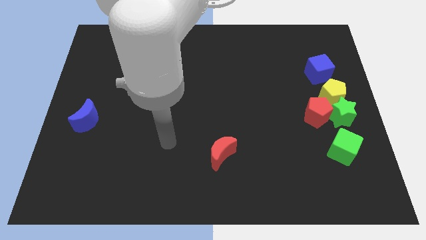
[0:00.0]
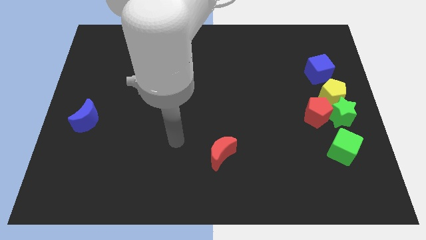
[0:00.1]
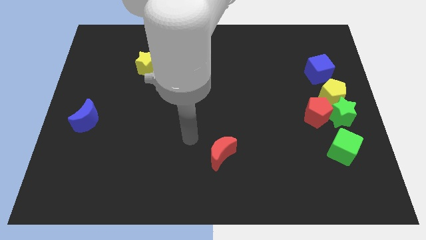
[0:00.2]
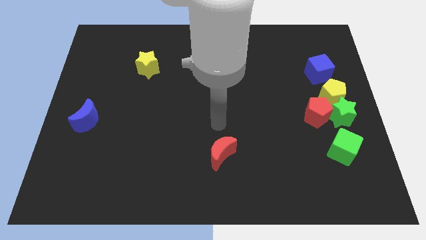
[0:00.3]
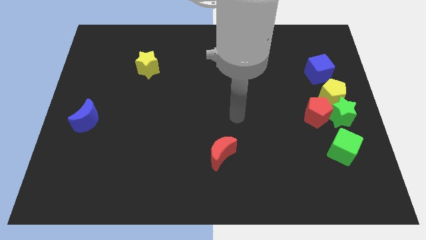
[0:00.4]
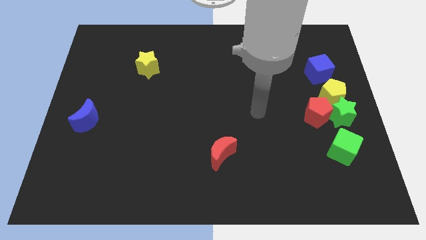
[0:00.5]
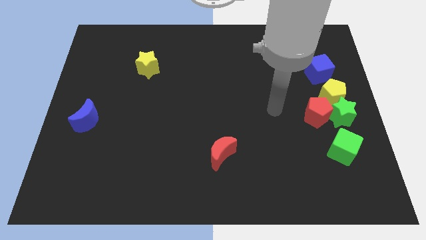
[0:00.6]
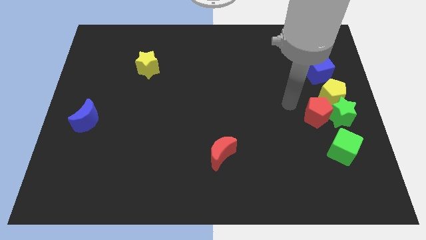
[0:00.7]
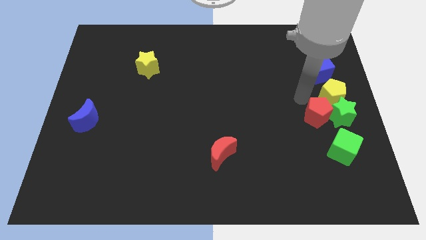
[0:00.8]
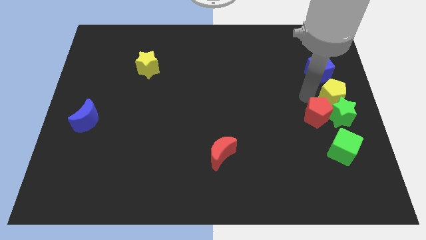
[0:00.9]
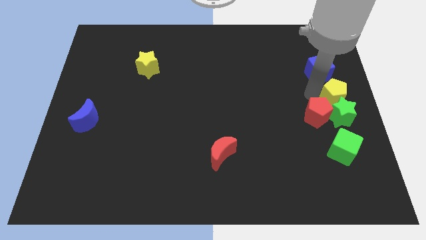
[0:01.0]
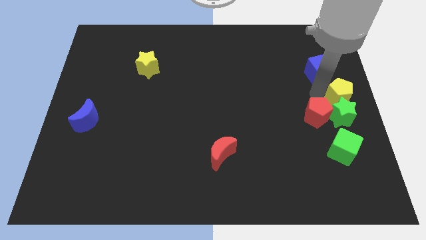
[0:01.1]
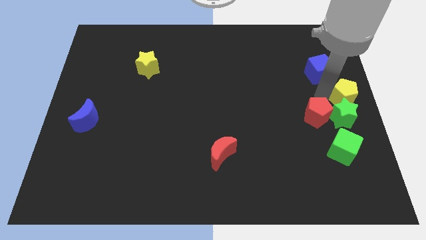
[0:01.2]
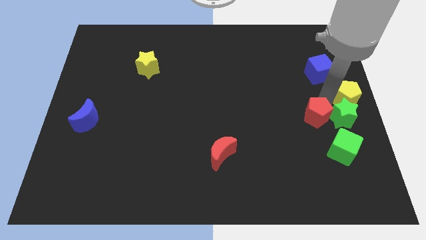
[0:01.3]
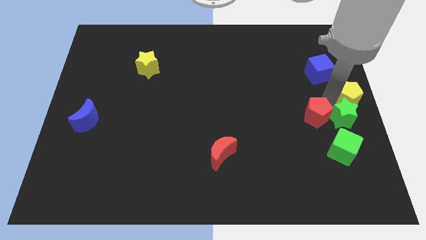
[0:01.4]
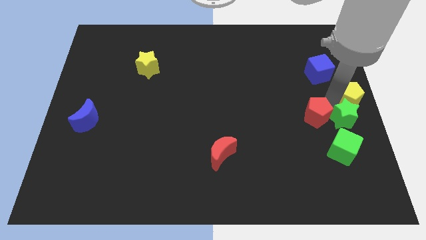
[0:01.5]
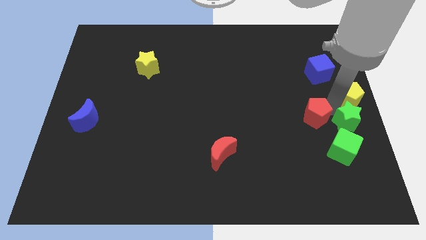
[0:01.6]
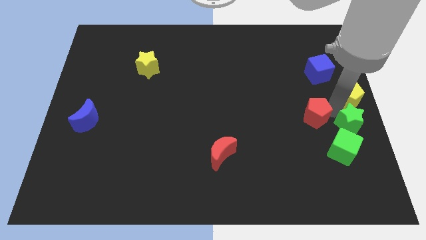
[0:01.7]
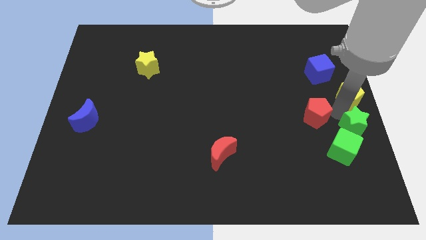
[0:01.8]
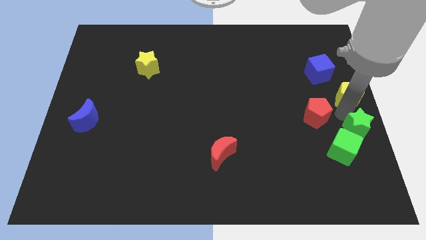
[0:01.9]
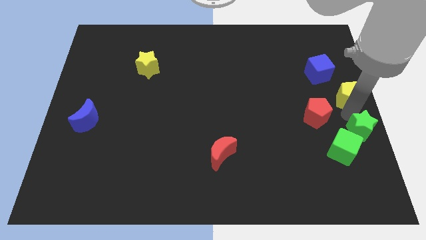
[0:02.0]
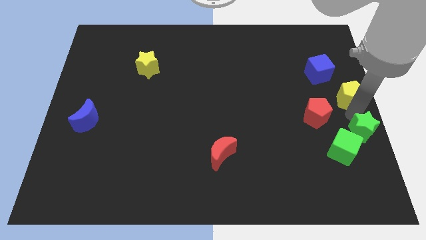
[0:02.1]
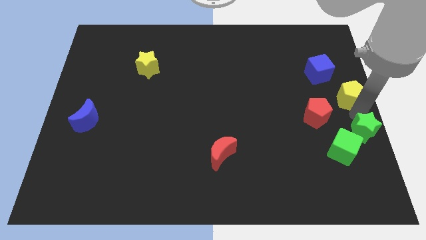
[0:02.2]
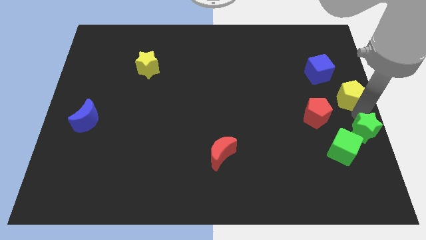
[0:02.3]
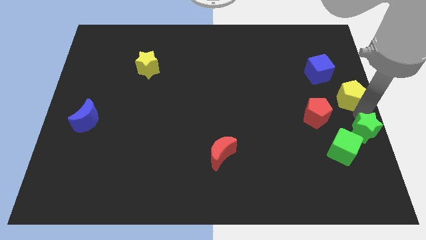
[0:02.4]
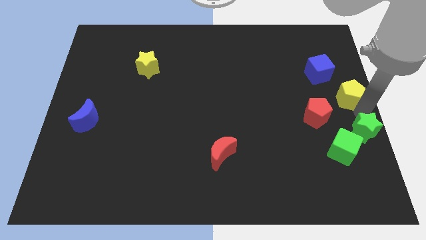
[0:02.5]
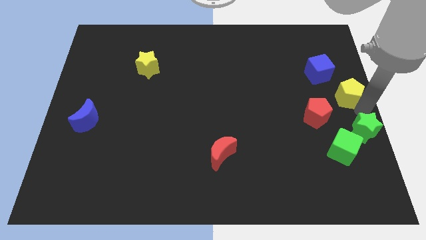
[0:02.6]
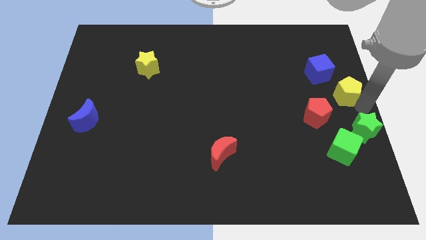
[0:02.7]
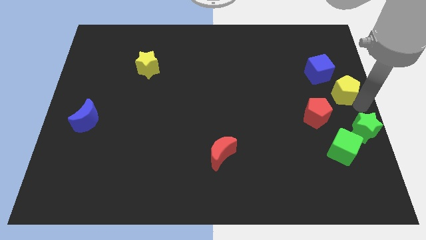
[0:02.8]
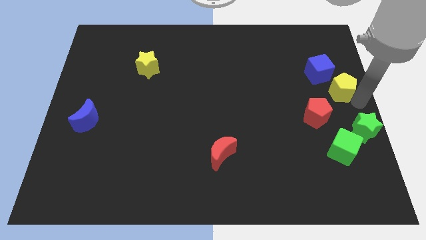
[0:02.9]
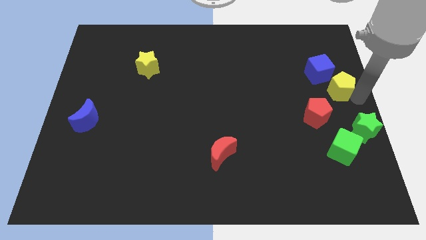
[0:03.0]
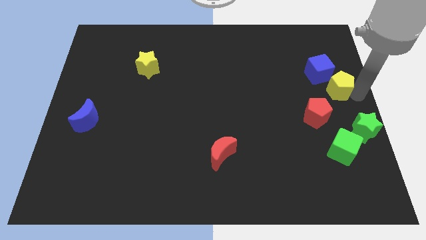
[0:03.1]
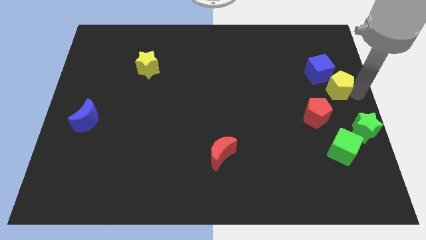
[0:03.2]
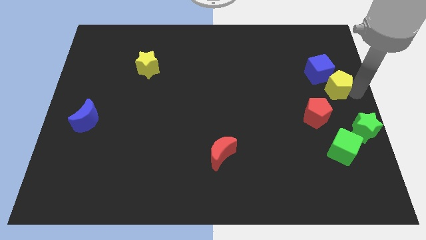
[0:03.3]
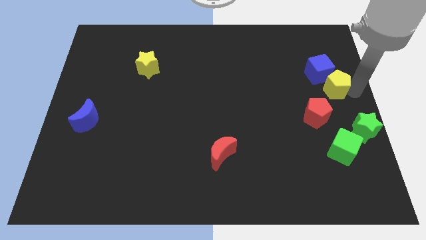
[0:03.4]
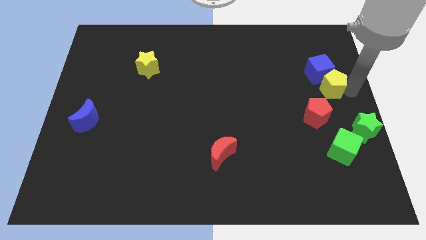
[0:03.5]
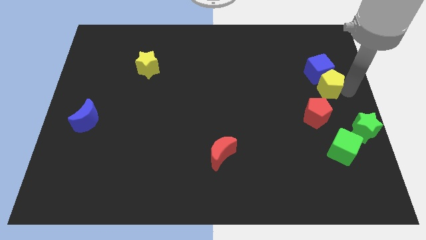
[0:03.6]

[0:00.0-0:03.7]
move the yellow pentagon next to the blue cube

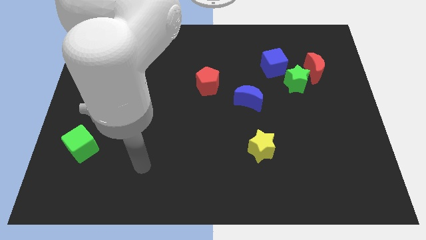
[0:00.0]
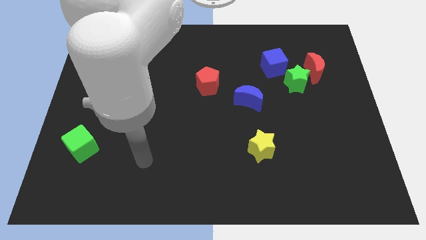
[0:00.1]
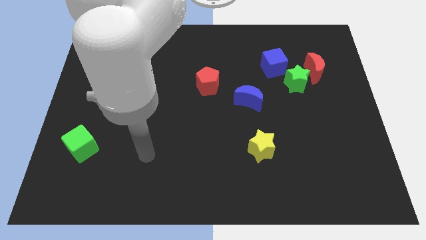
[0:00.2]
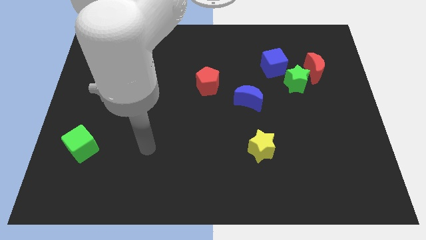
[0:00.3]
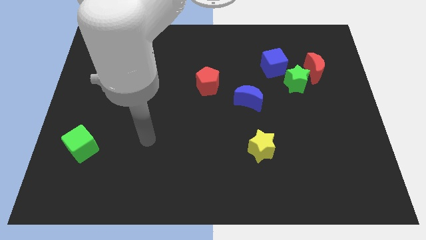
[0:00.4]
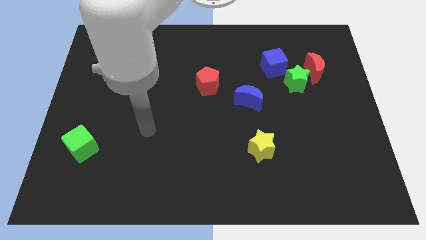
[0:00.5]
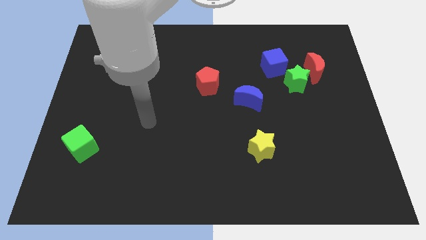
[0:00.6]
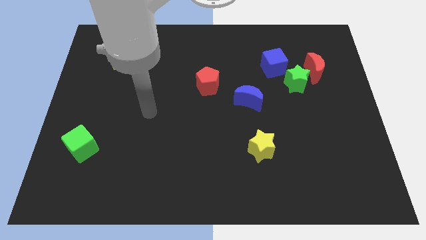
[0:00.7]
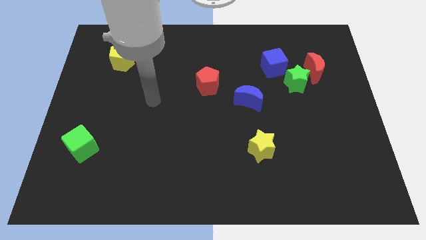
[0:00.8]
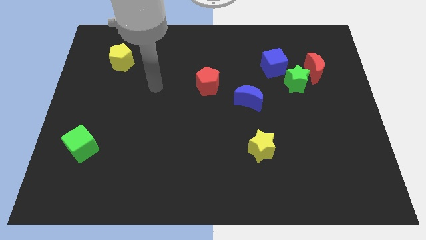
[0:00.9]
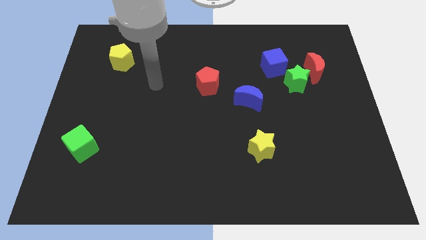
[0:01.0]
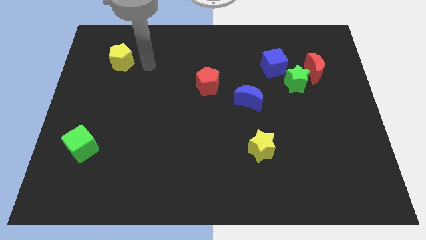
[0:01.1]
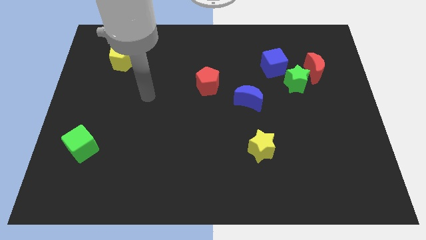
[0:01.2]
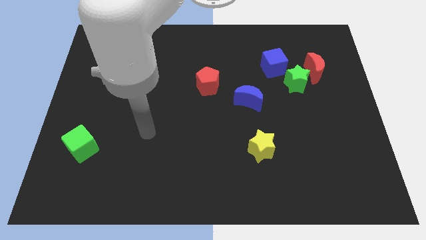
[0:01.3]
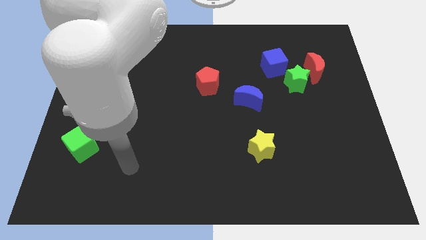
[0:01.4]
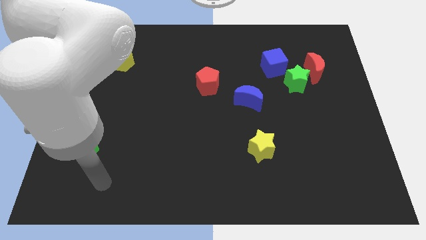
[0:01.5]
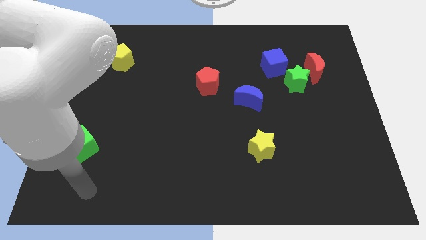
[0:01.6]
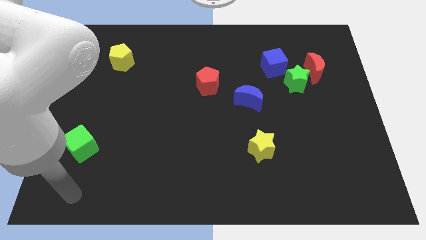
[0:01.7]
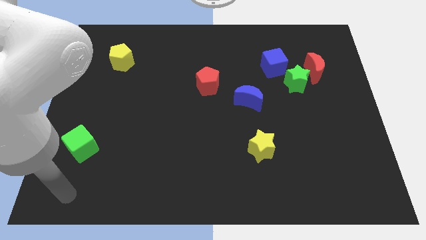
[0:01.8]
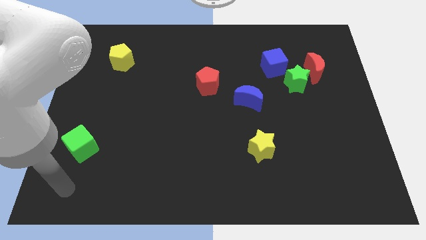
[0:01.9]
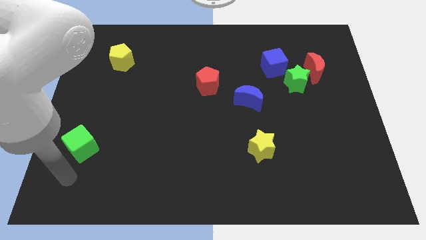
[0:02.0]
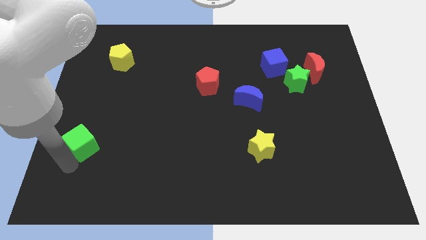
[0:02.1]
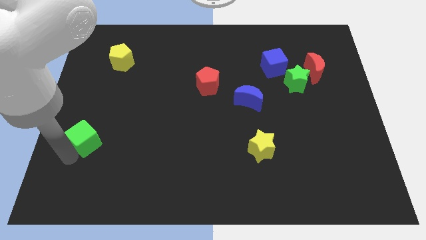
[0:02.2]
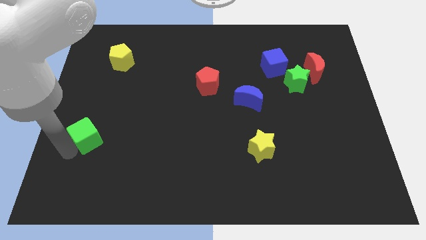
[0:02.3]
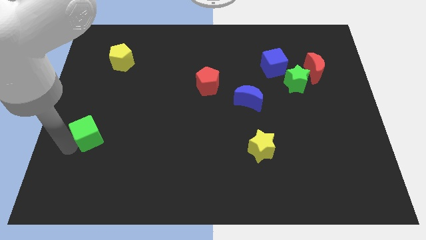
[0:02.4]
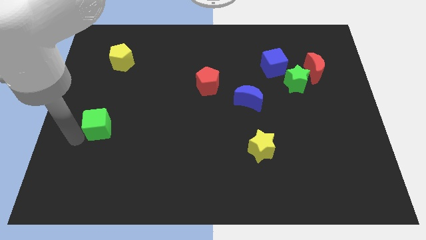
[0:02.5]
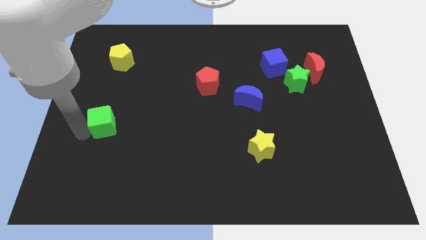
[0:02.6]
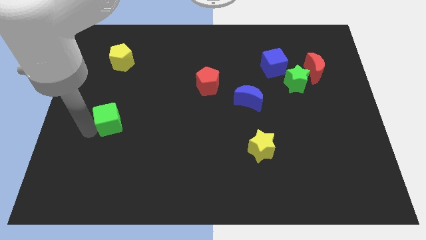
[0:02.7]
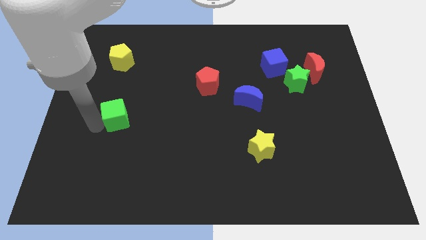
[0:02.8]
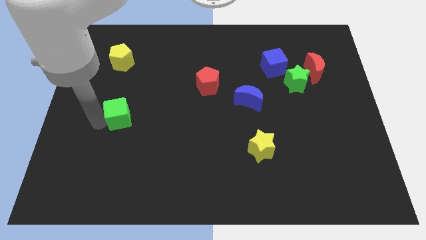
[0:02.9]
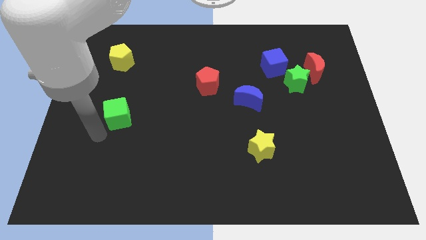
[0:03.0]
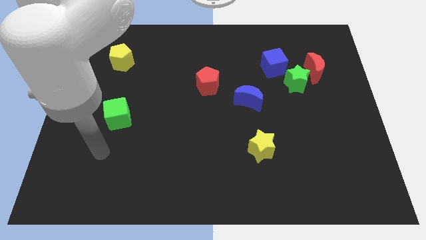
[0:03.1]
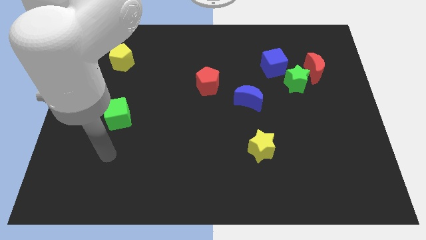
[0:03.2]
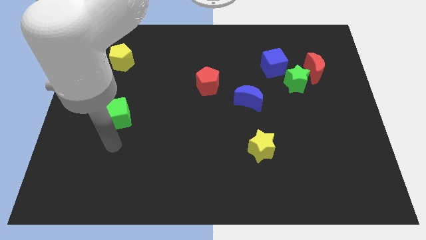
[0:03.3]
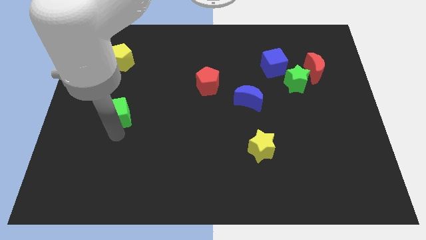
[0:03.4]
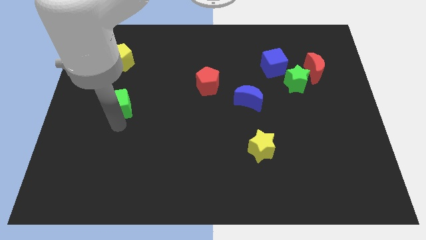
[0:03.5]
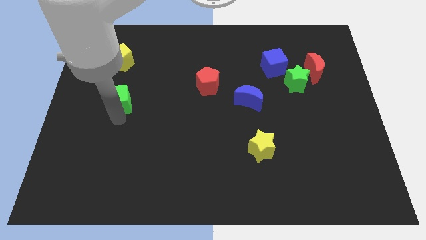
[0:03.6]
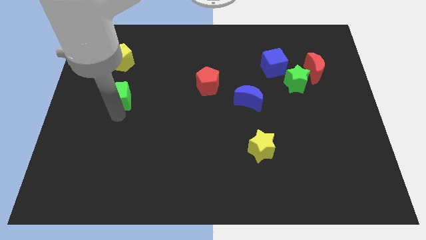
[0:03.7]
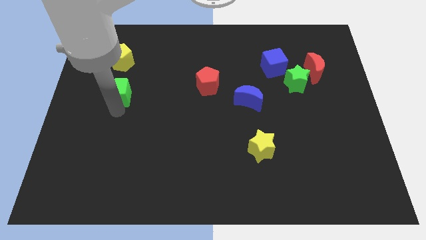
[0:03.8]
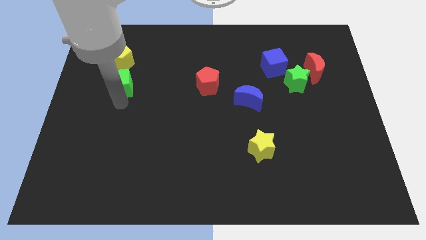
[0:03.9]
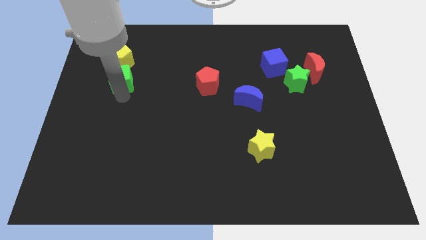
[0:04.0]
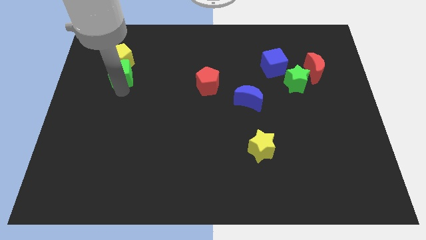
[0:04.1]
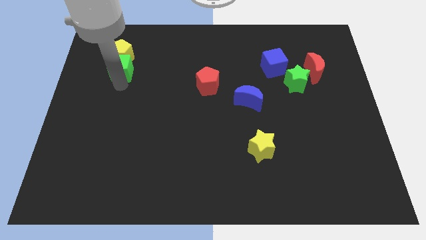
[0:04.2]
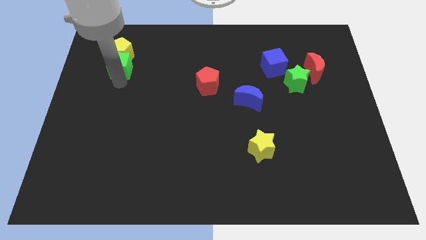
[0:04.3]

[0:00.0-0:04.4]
slide the green cube close to the yellow pentagon
